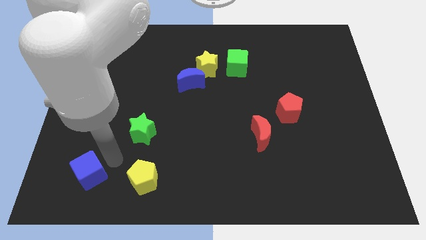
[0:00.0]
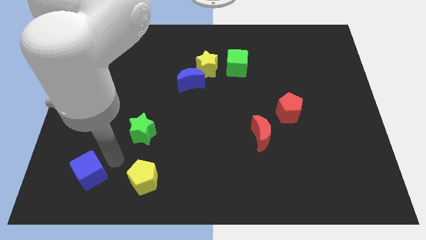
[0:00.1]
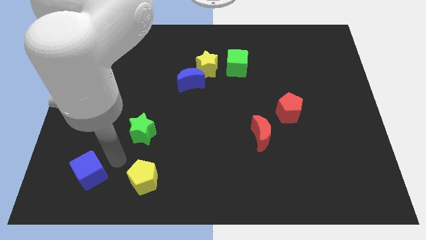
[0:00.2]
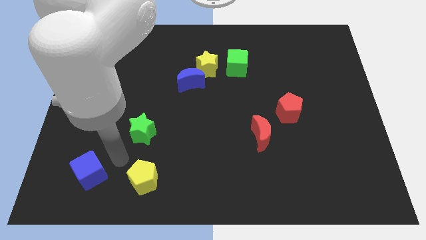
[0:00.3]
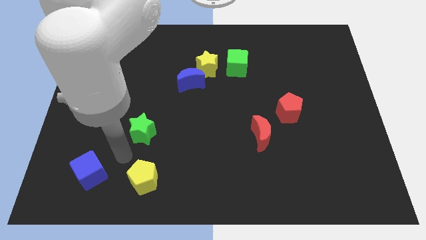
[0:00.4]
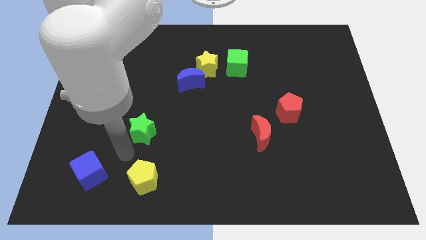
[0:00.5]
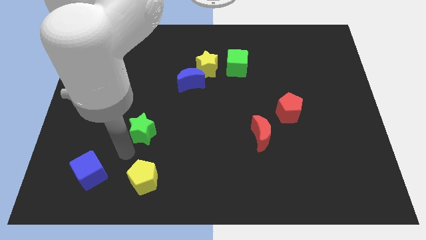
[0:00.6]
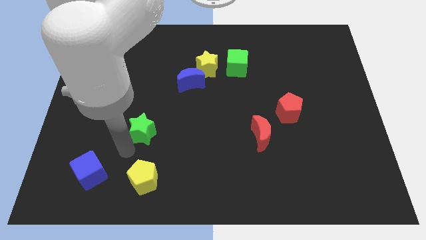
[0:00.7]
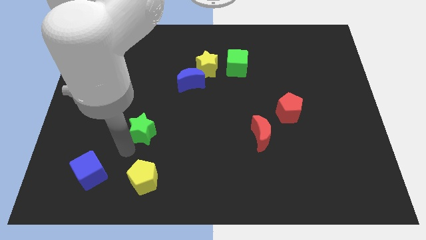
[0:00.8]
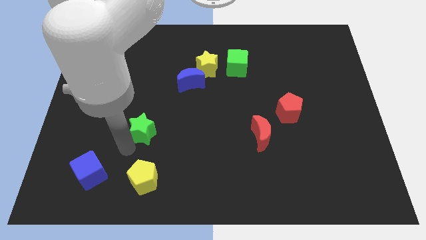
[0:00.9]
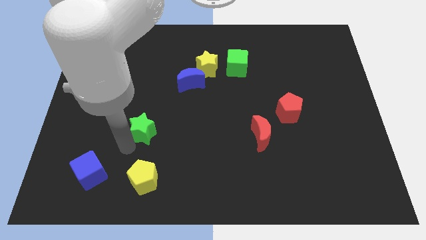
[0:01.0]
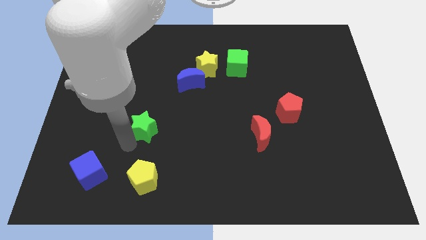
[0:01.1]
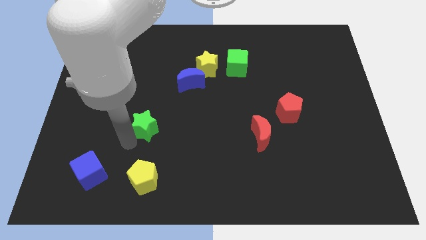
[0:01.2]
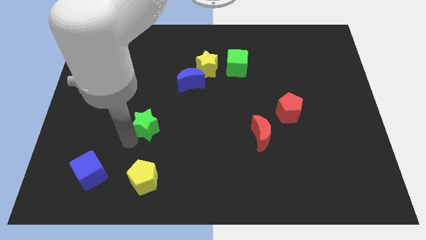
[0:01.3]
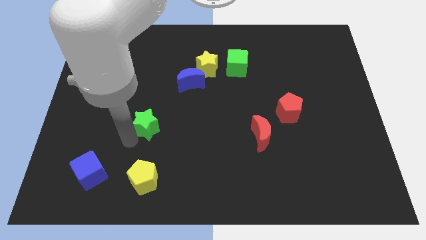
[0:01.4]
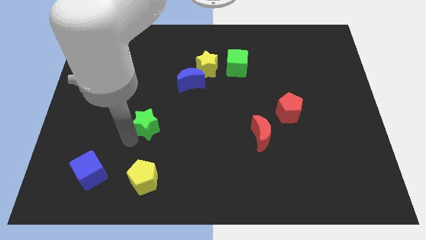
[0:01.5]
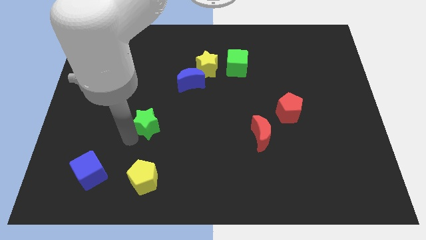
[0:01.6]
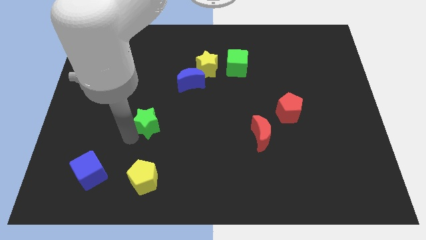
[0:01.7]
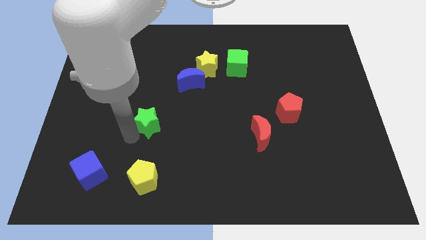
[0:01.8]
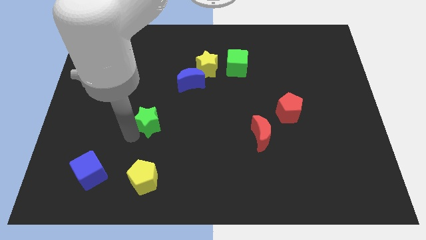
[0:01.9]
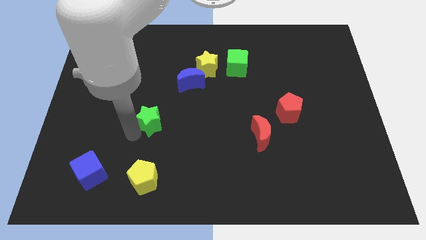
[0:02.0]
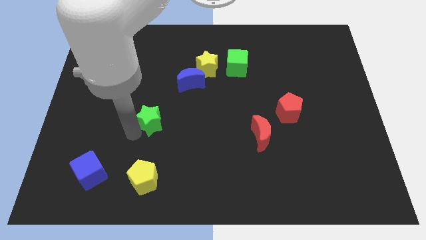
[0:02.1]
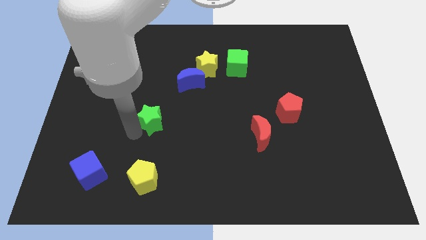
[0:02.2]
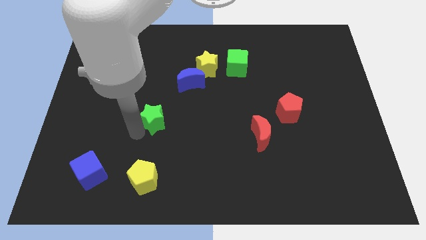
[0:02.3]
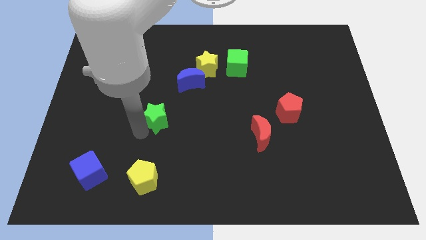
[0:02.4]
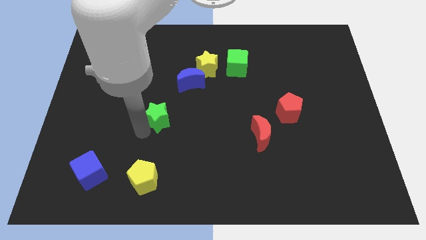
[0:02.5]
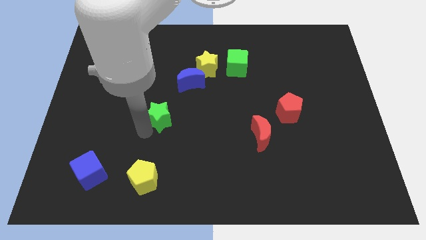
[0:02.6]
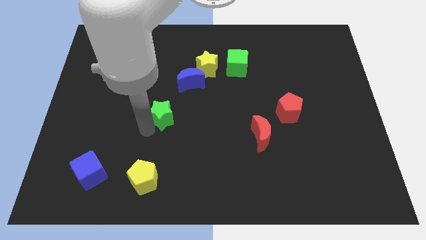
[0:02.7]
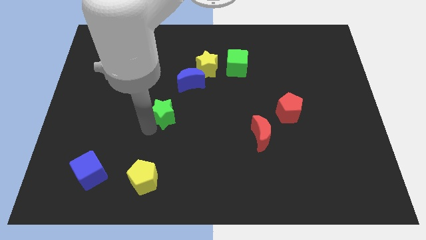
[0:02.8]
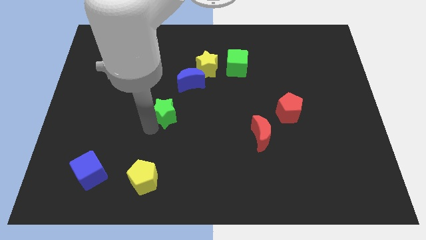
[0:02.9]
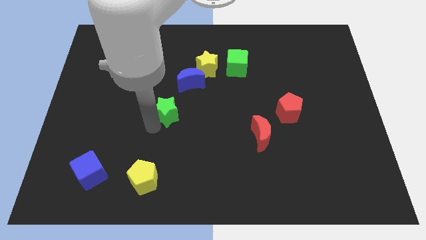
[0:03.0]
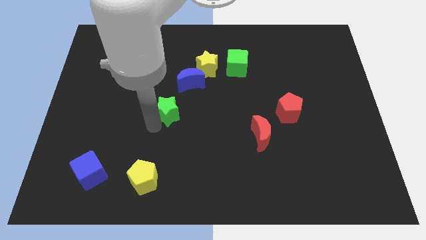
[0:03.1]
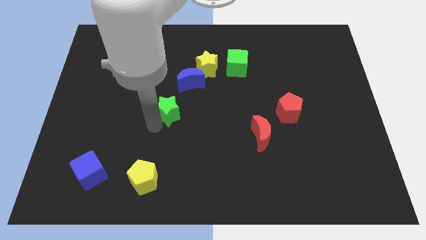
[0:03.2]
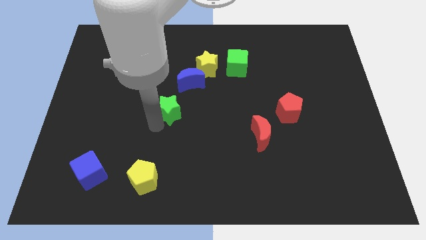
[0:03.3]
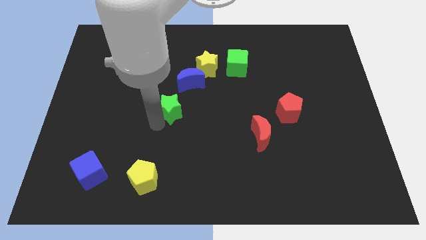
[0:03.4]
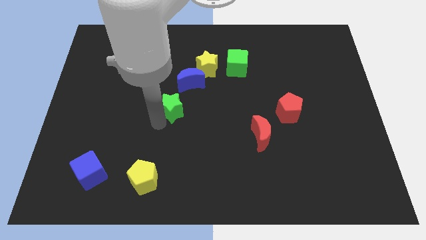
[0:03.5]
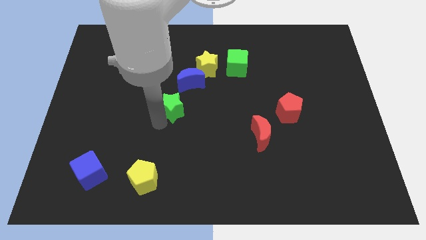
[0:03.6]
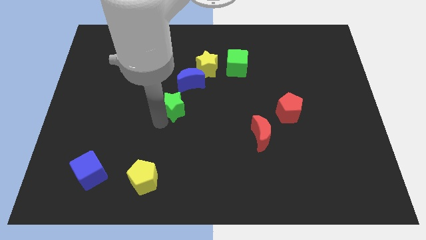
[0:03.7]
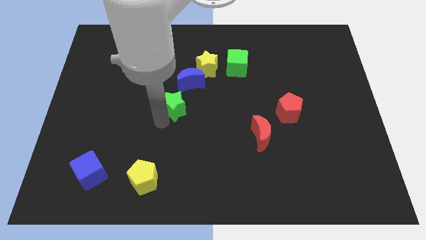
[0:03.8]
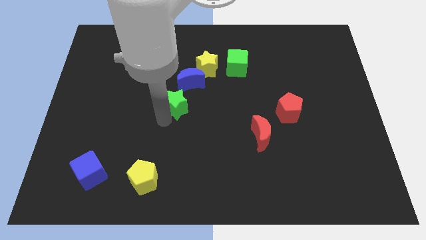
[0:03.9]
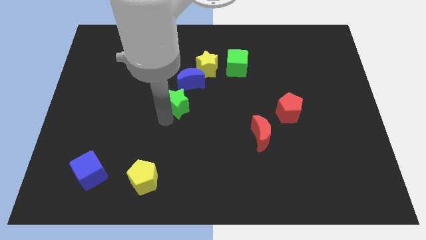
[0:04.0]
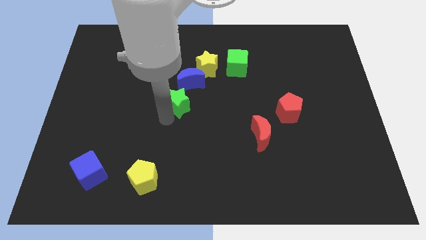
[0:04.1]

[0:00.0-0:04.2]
move the green star to the bottom of the blue crescent

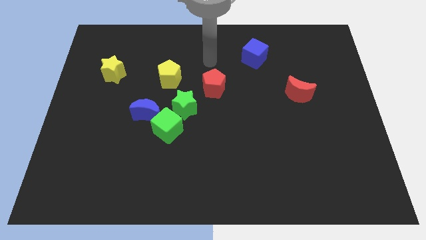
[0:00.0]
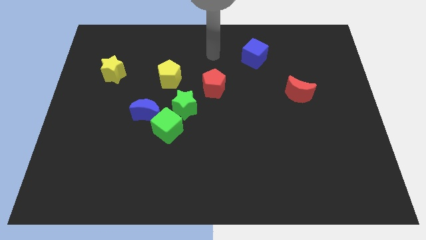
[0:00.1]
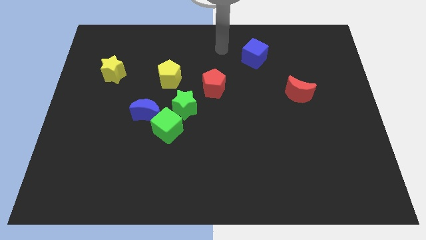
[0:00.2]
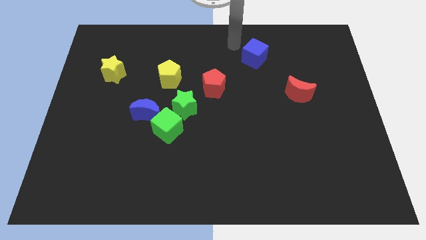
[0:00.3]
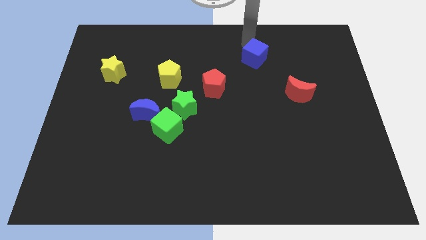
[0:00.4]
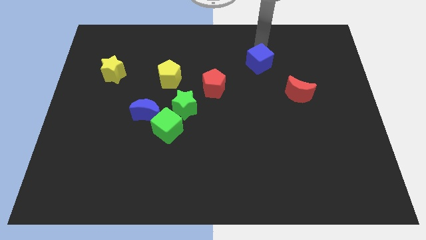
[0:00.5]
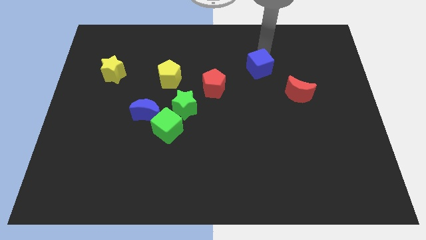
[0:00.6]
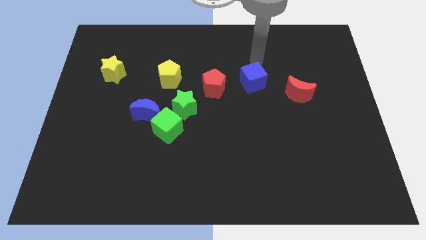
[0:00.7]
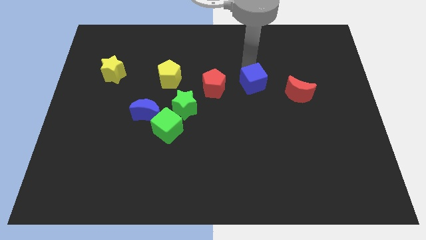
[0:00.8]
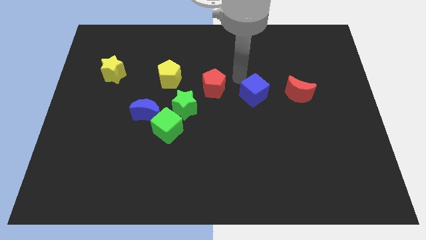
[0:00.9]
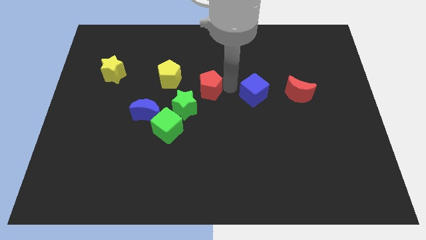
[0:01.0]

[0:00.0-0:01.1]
place the blue cube in between the red blocks

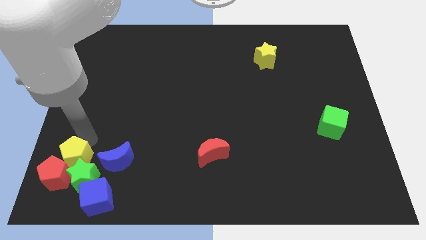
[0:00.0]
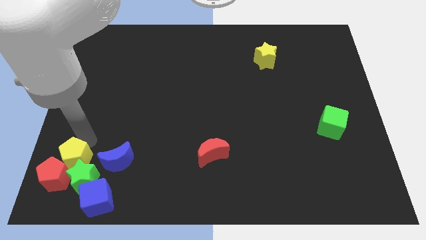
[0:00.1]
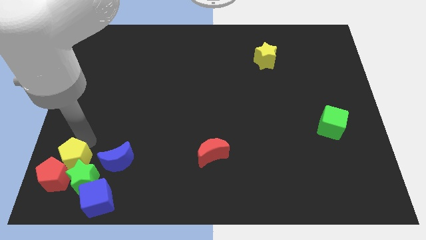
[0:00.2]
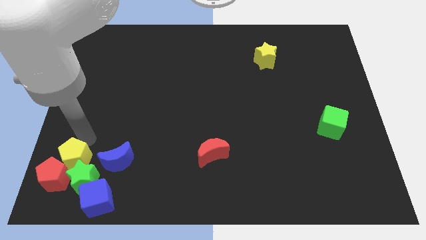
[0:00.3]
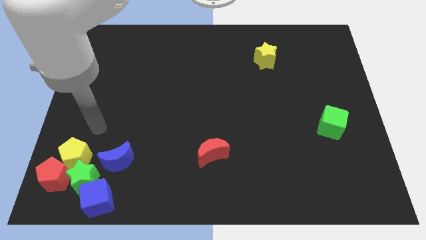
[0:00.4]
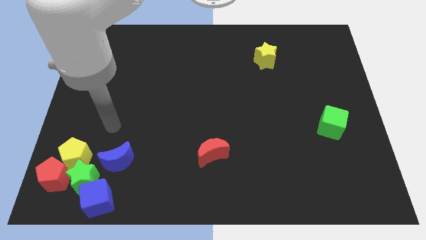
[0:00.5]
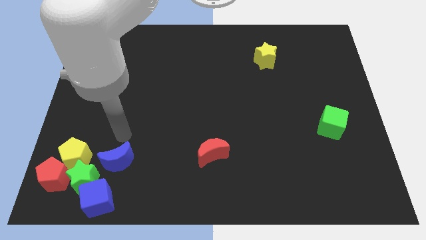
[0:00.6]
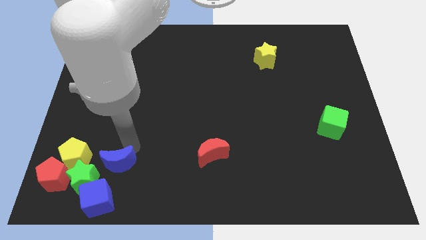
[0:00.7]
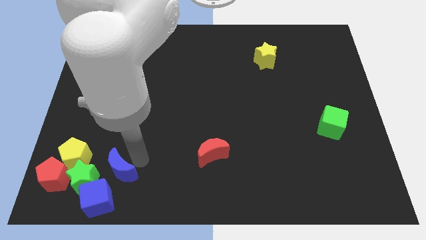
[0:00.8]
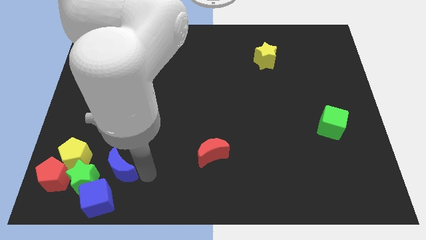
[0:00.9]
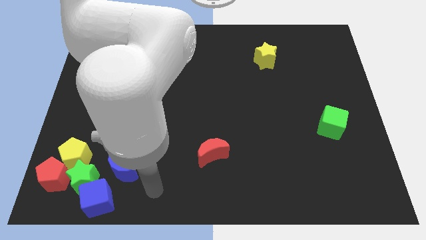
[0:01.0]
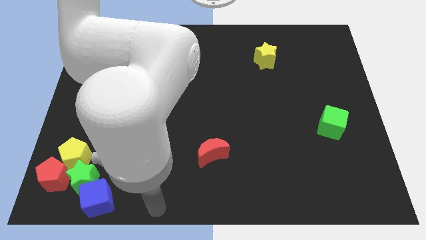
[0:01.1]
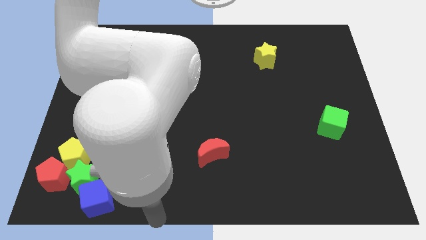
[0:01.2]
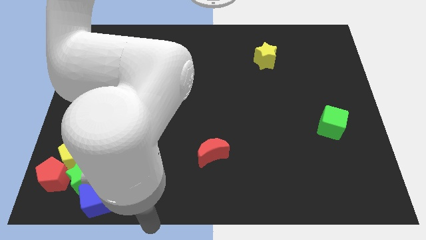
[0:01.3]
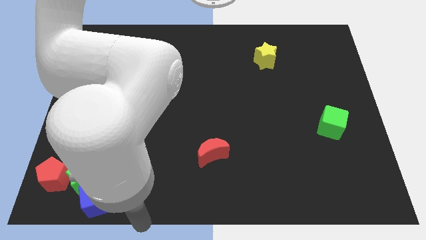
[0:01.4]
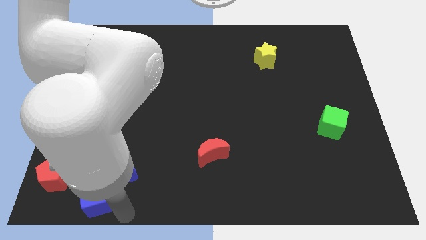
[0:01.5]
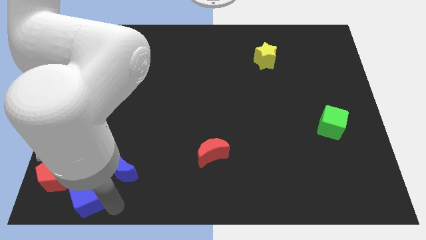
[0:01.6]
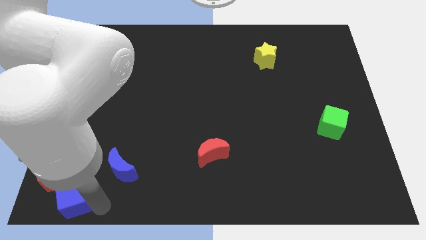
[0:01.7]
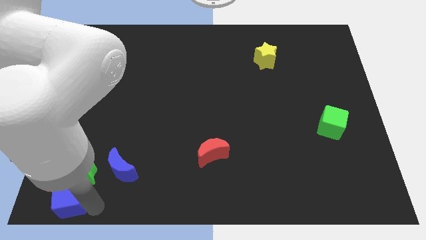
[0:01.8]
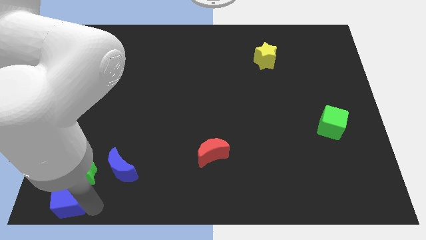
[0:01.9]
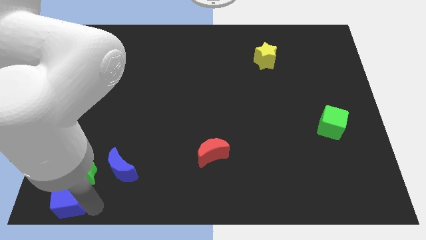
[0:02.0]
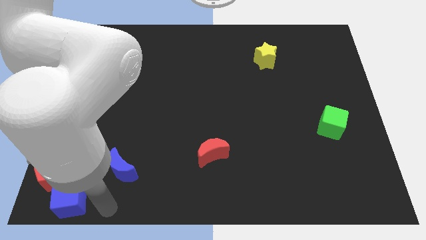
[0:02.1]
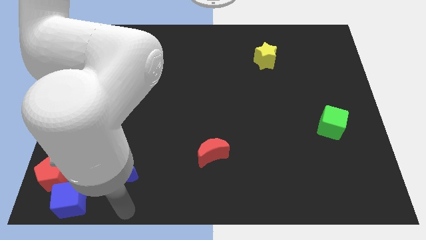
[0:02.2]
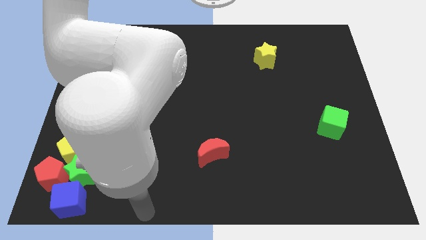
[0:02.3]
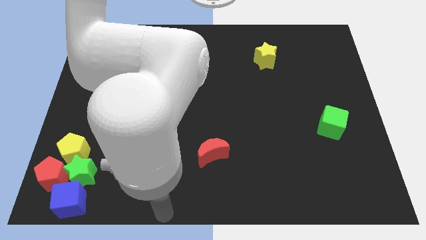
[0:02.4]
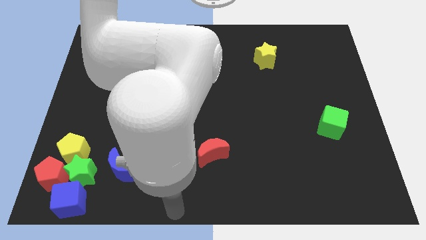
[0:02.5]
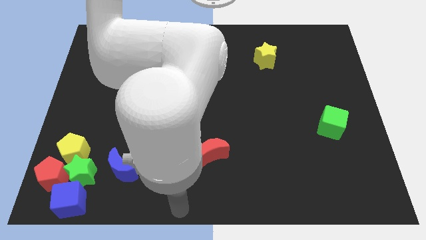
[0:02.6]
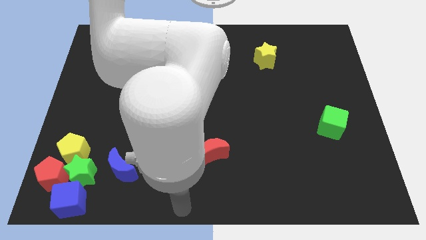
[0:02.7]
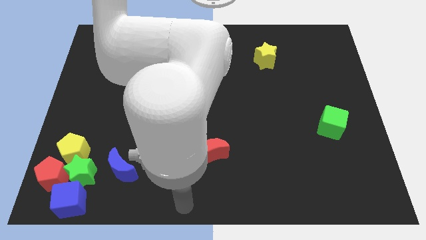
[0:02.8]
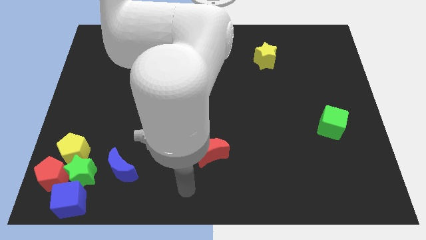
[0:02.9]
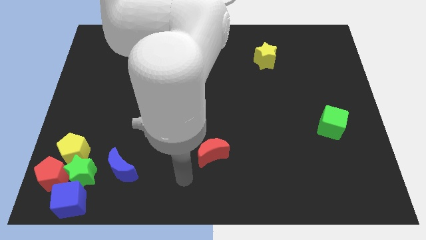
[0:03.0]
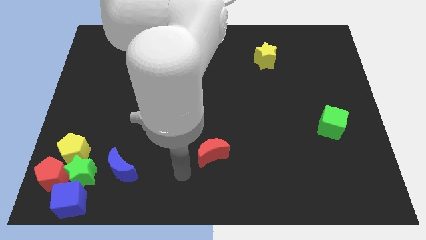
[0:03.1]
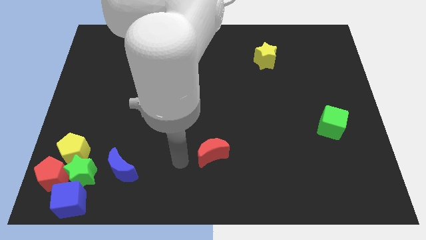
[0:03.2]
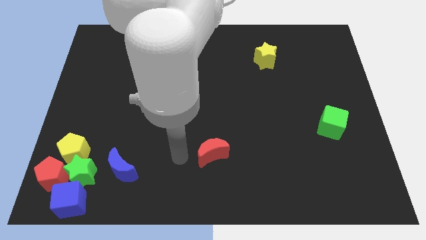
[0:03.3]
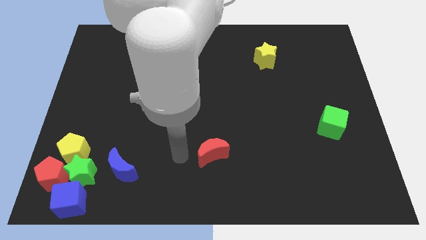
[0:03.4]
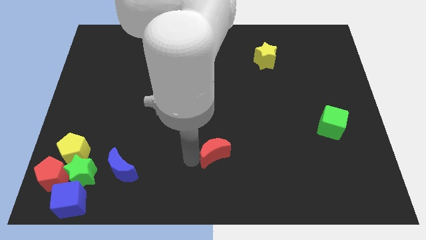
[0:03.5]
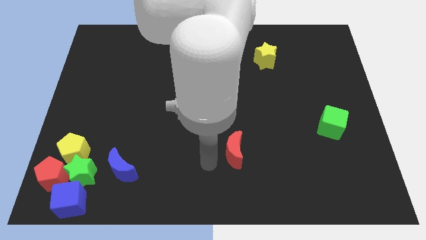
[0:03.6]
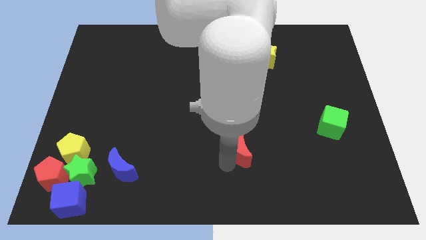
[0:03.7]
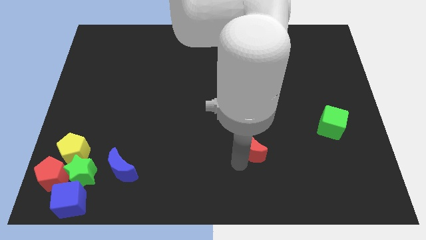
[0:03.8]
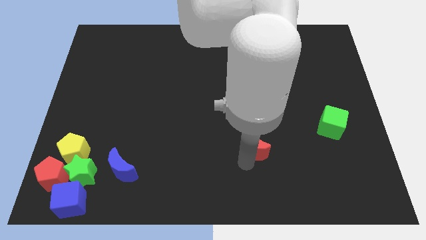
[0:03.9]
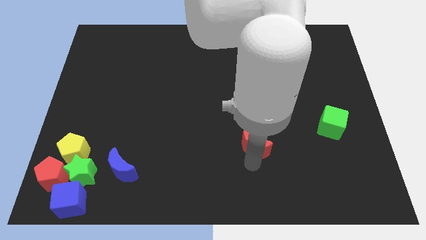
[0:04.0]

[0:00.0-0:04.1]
slightly move the red moon towards the right
